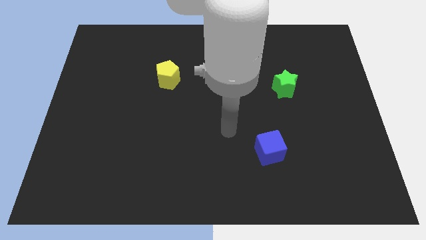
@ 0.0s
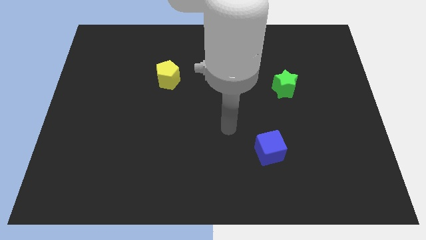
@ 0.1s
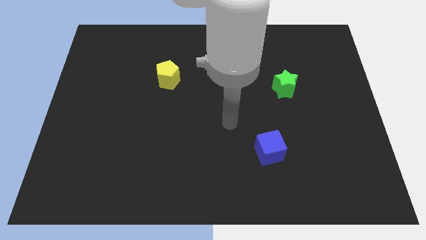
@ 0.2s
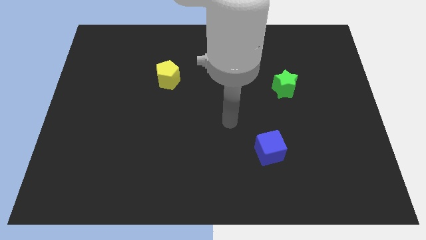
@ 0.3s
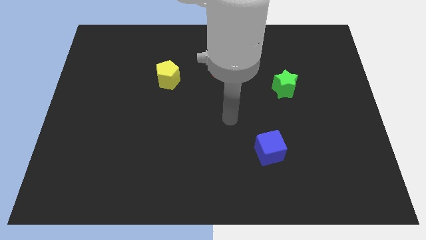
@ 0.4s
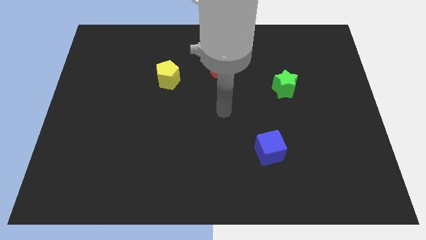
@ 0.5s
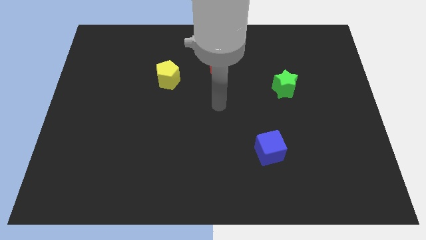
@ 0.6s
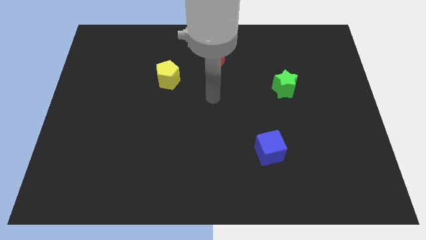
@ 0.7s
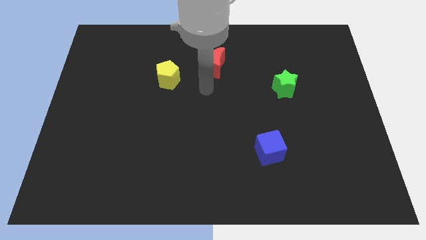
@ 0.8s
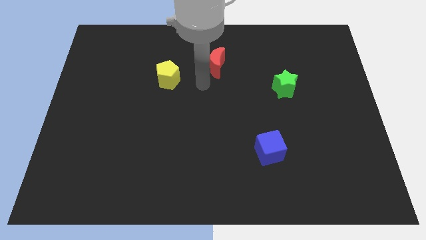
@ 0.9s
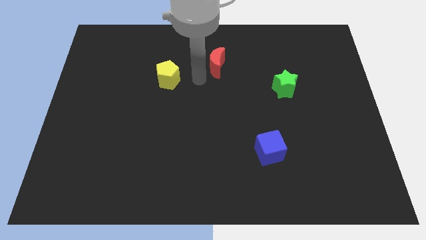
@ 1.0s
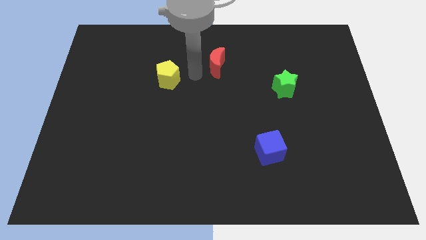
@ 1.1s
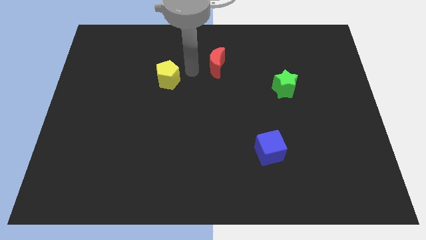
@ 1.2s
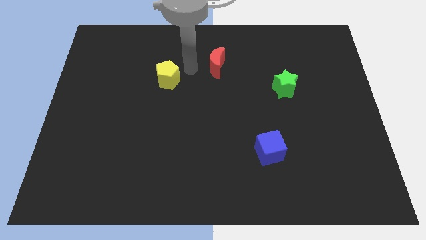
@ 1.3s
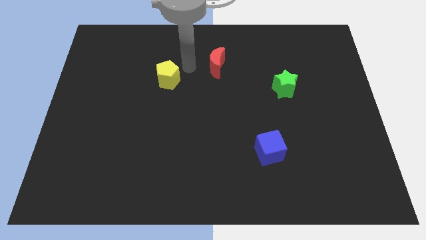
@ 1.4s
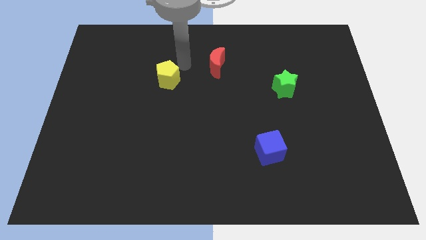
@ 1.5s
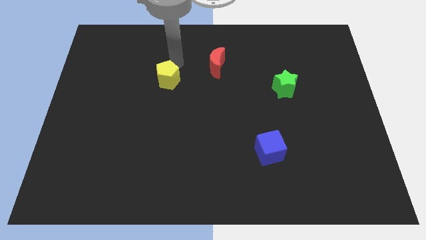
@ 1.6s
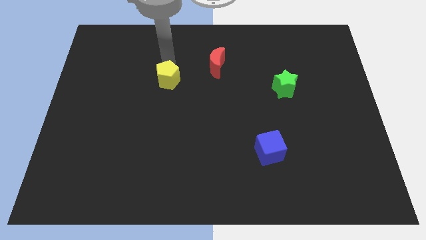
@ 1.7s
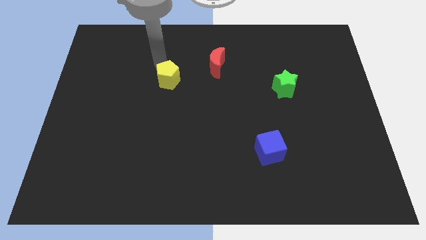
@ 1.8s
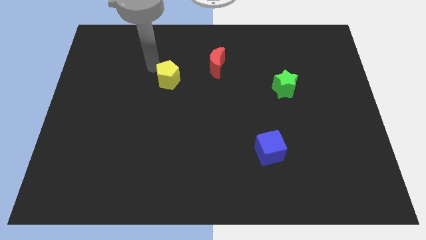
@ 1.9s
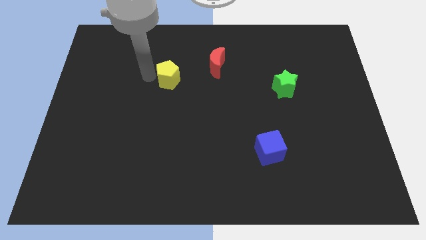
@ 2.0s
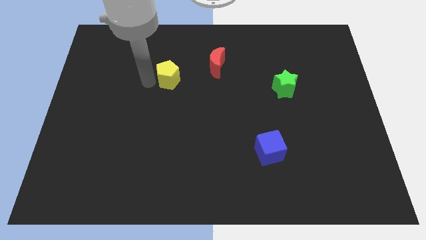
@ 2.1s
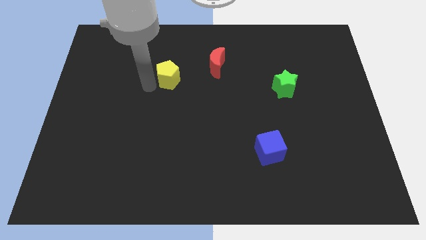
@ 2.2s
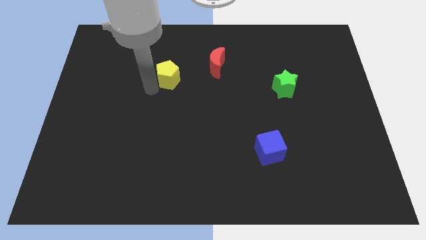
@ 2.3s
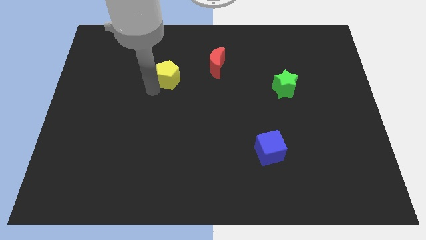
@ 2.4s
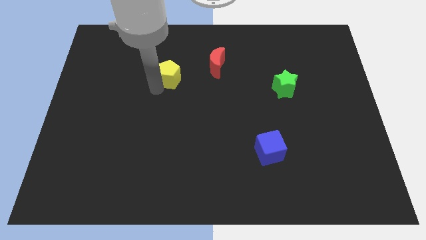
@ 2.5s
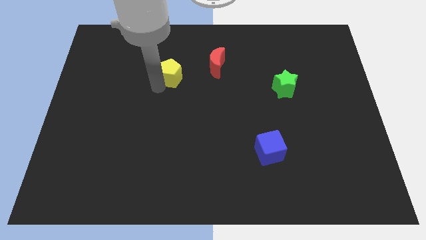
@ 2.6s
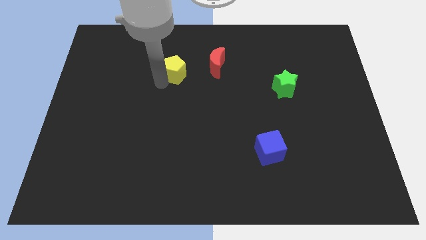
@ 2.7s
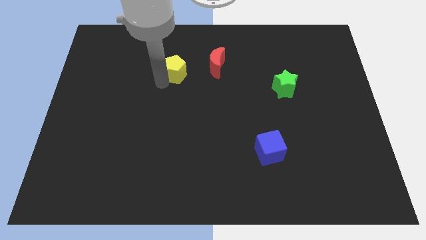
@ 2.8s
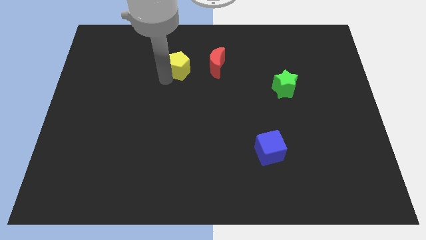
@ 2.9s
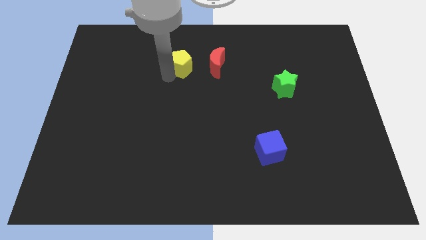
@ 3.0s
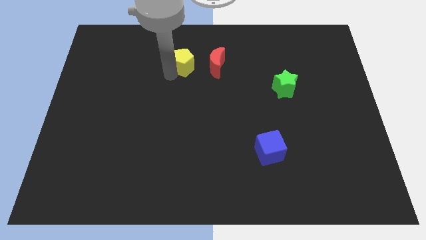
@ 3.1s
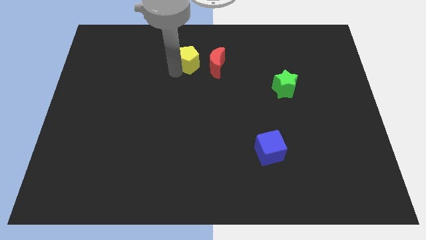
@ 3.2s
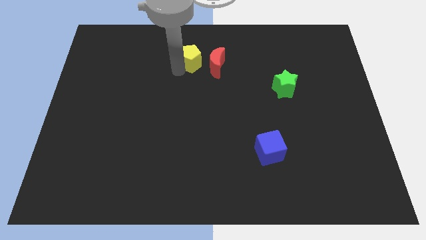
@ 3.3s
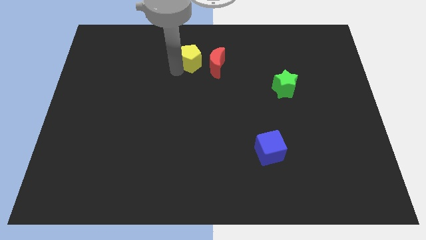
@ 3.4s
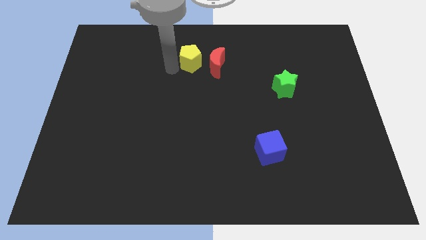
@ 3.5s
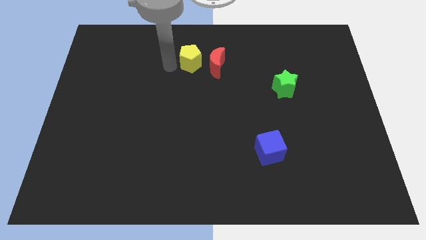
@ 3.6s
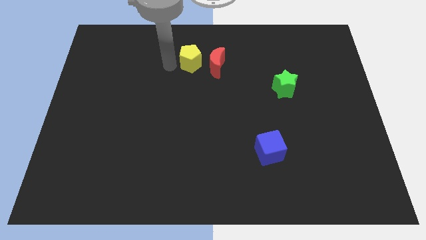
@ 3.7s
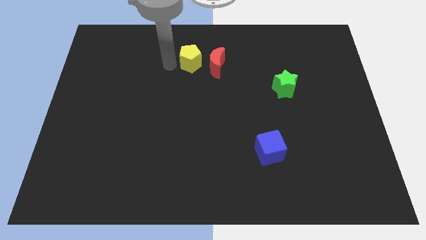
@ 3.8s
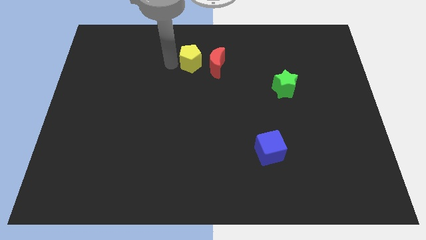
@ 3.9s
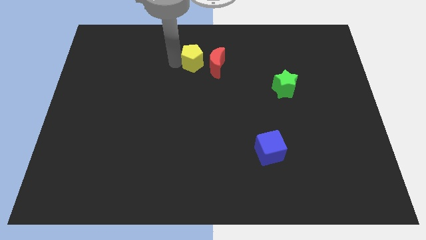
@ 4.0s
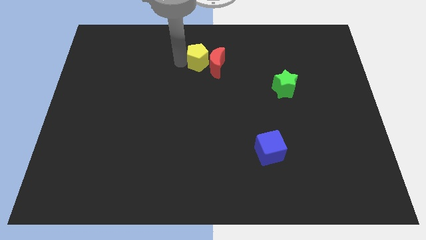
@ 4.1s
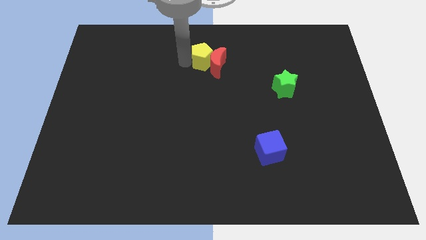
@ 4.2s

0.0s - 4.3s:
move the yellow block close to the moon

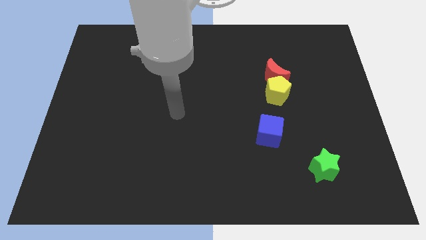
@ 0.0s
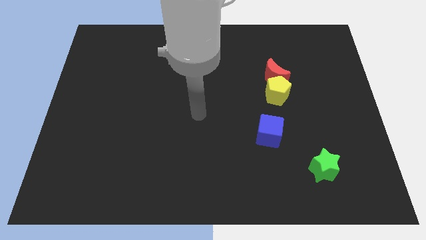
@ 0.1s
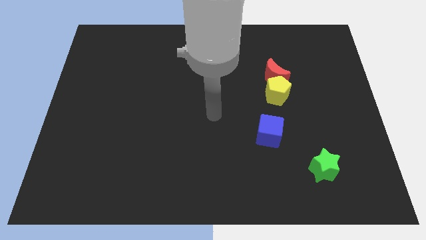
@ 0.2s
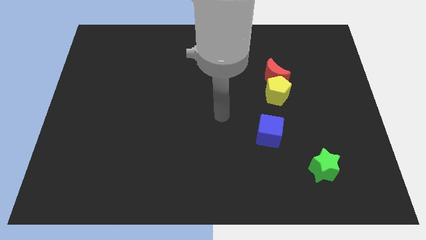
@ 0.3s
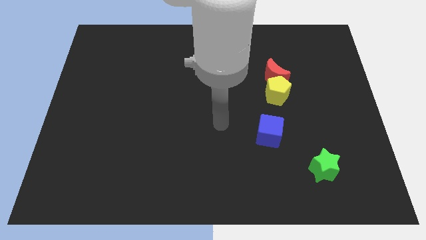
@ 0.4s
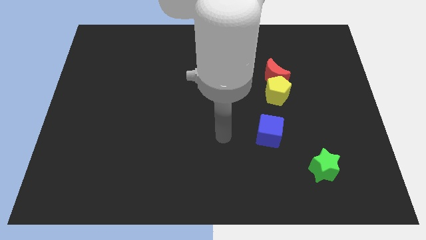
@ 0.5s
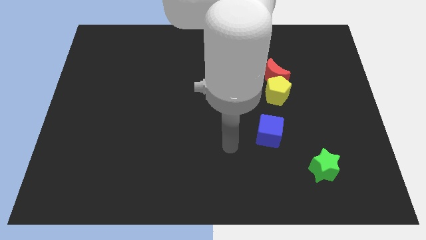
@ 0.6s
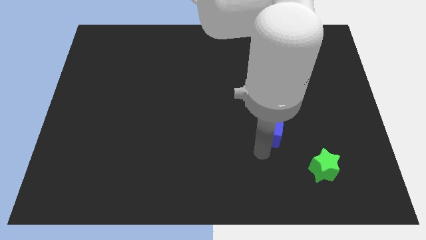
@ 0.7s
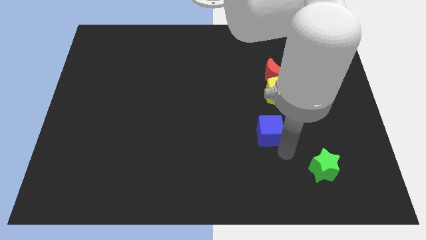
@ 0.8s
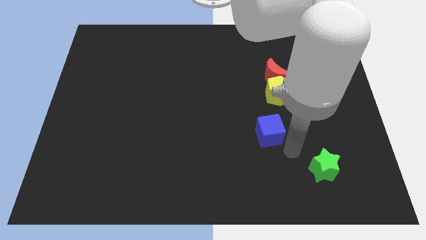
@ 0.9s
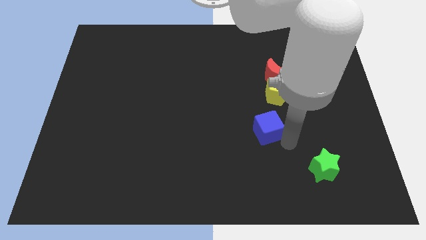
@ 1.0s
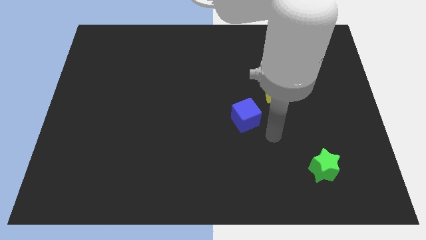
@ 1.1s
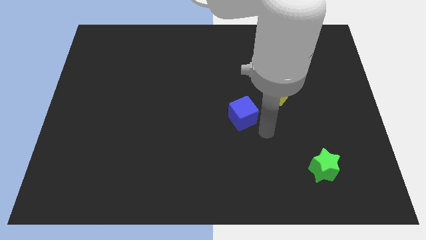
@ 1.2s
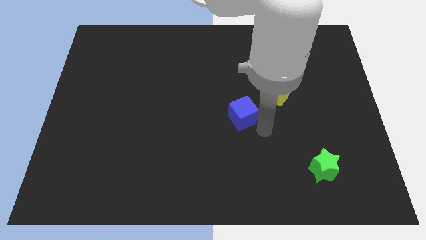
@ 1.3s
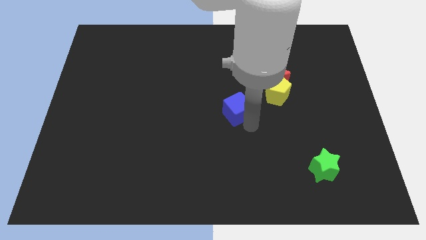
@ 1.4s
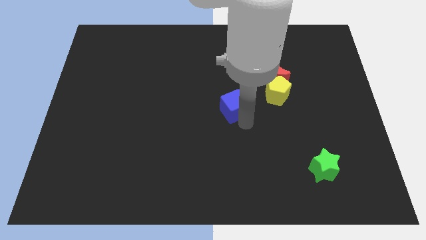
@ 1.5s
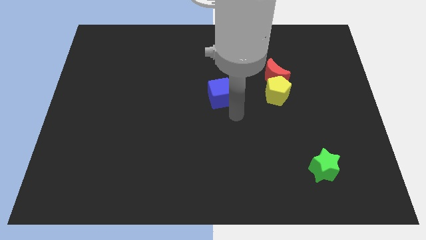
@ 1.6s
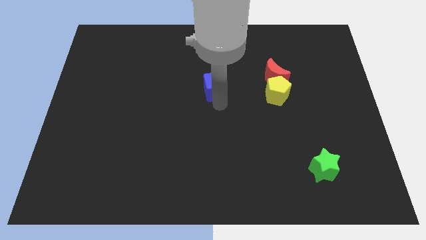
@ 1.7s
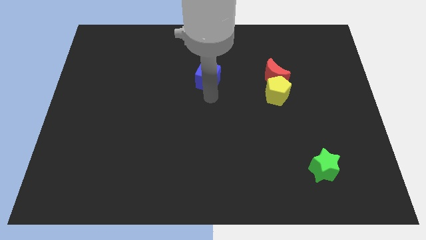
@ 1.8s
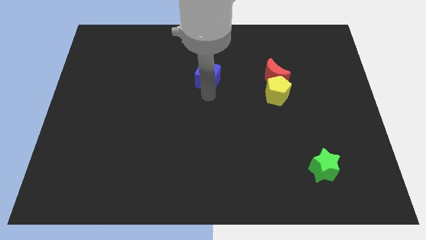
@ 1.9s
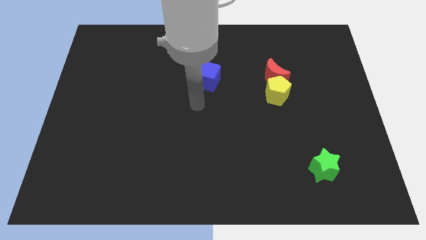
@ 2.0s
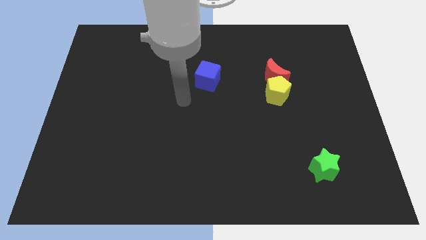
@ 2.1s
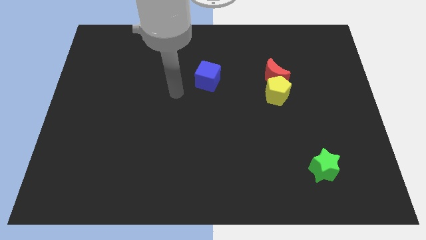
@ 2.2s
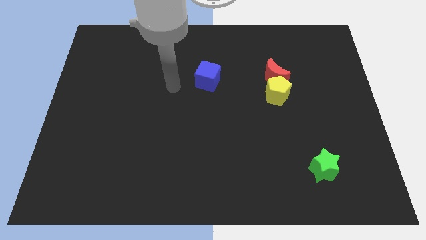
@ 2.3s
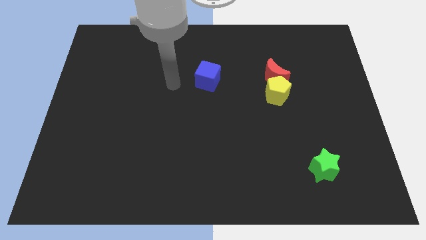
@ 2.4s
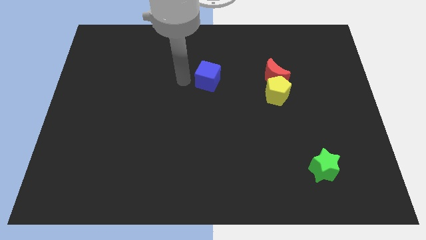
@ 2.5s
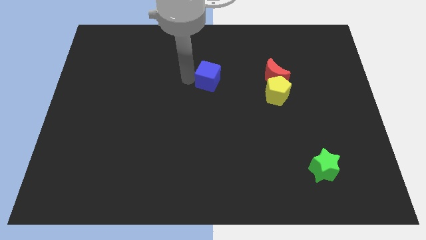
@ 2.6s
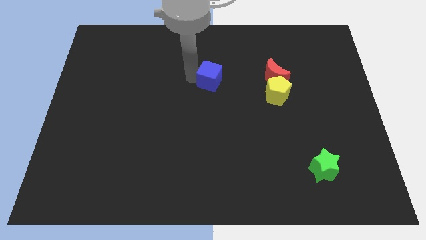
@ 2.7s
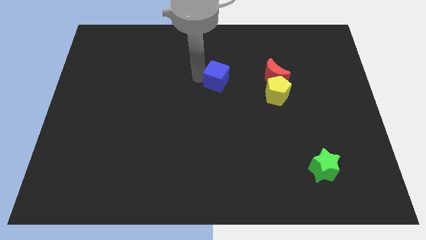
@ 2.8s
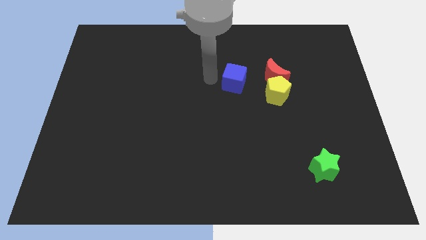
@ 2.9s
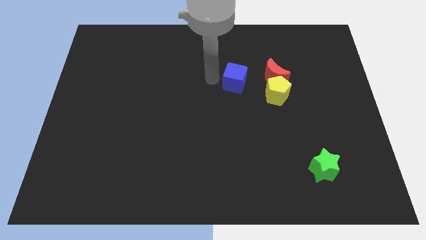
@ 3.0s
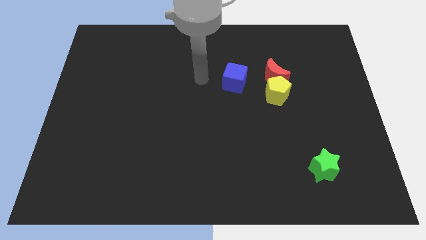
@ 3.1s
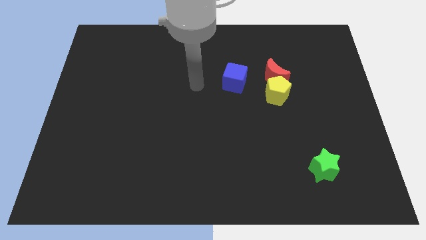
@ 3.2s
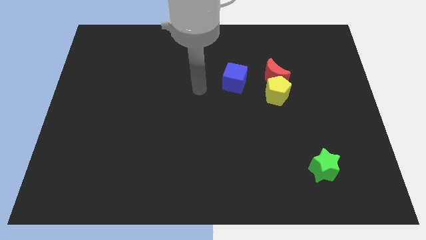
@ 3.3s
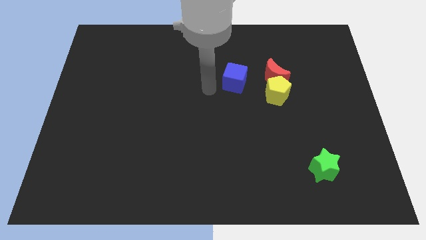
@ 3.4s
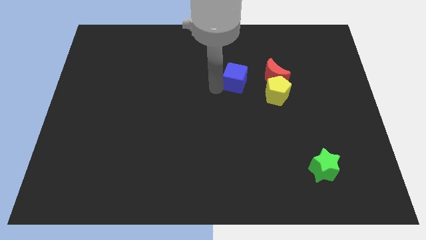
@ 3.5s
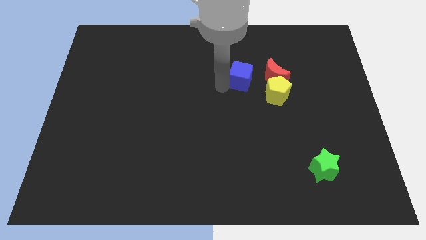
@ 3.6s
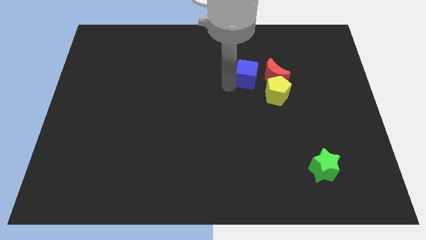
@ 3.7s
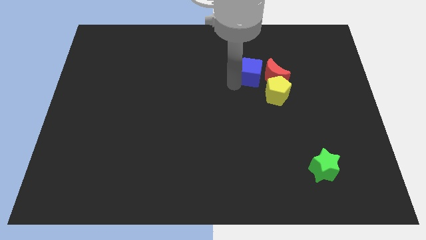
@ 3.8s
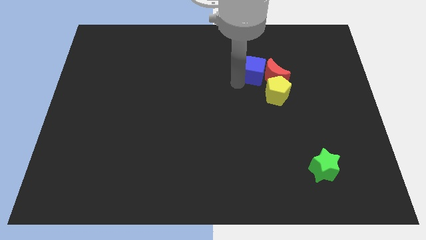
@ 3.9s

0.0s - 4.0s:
slide the cube towards the moon
